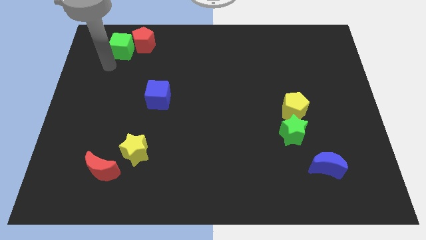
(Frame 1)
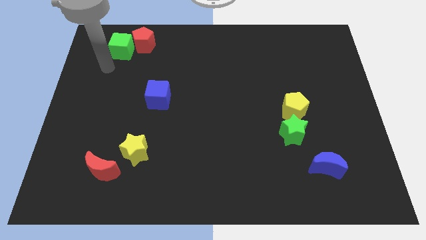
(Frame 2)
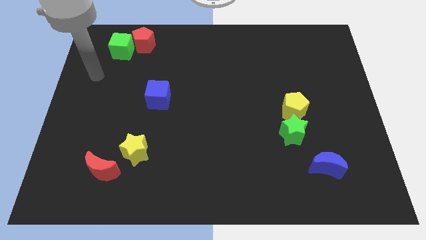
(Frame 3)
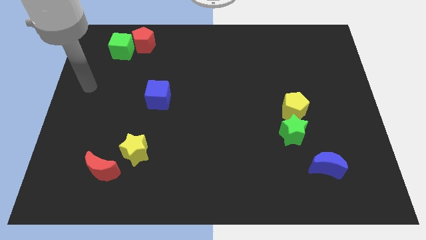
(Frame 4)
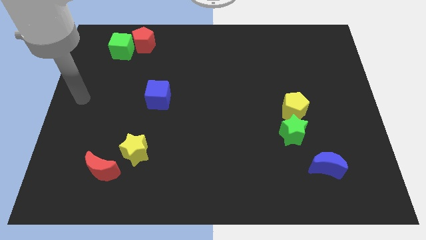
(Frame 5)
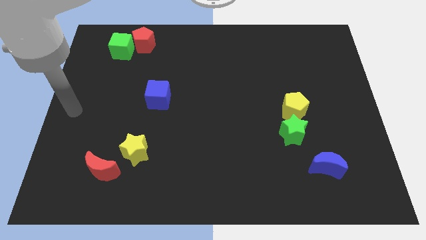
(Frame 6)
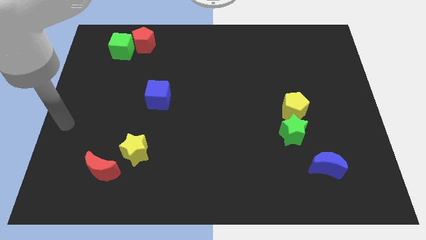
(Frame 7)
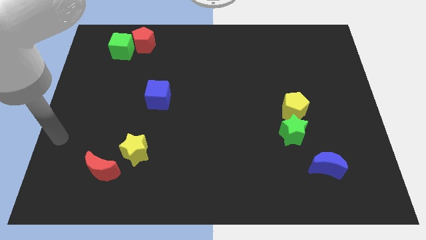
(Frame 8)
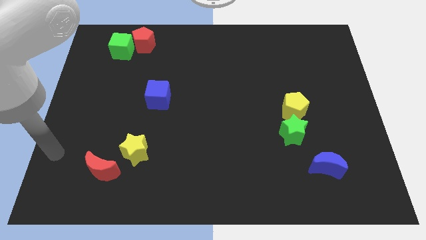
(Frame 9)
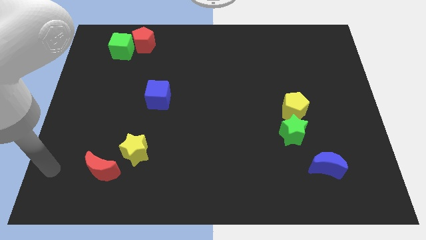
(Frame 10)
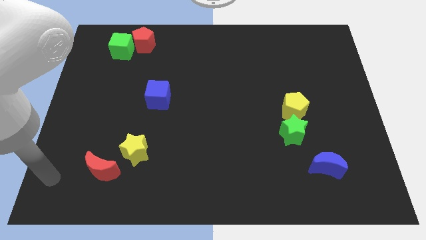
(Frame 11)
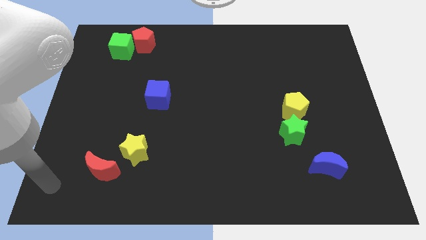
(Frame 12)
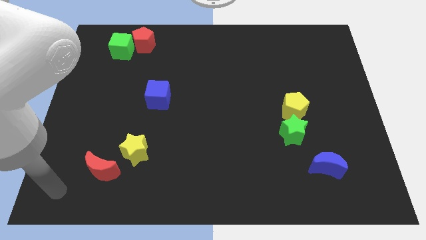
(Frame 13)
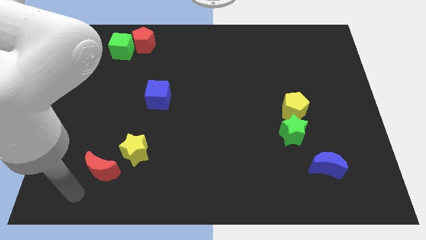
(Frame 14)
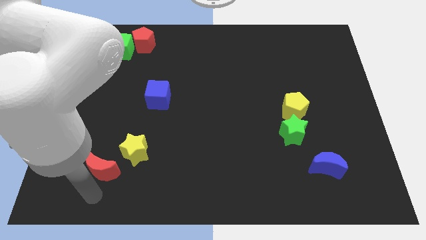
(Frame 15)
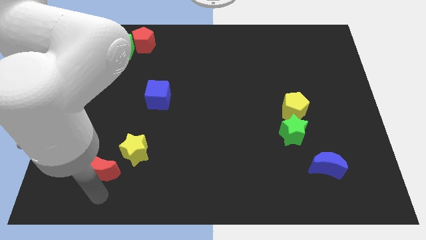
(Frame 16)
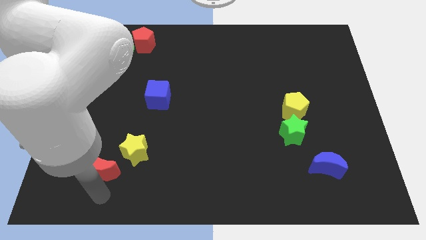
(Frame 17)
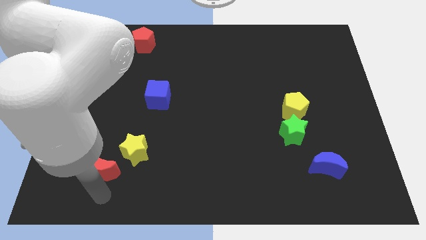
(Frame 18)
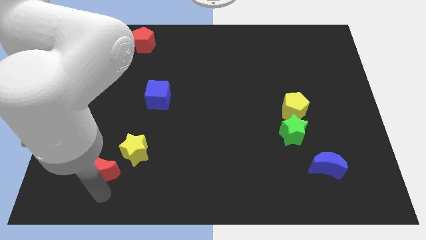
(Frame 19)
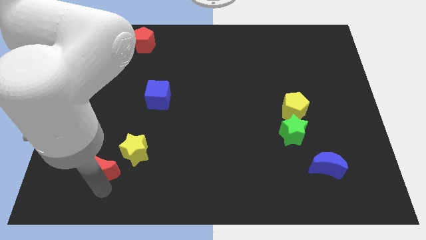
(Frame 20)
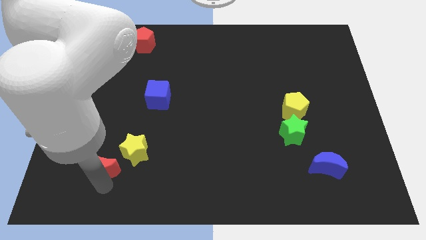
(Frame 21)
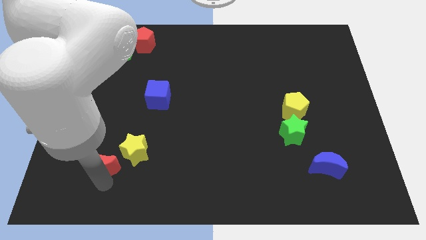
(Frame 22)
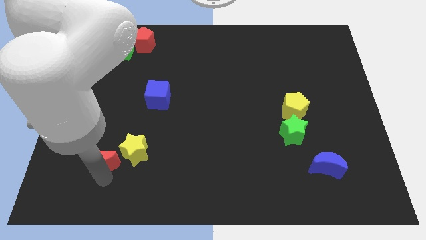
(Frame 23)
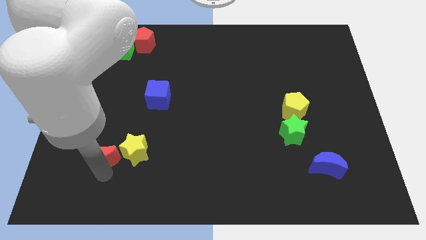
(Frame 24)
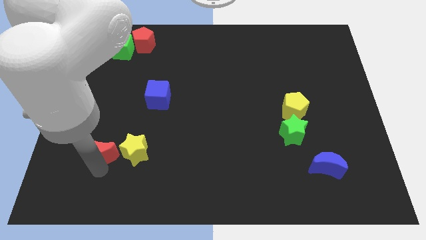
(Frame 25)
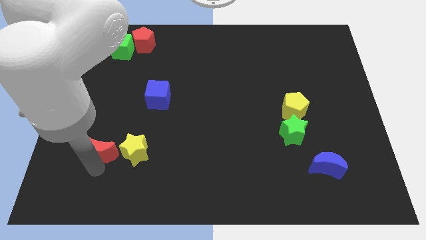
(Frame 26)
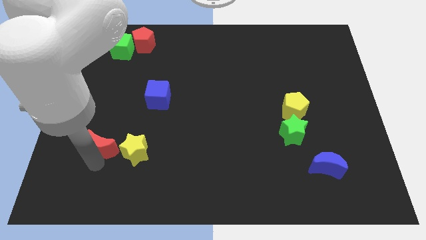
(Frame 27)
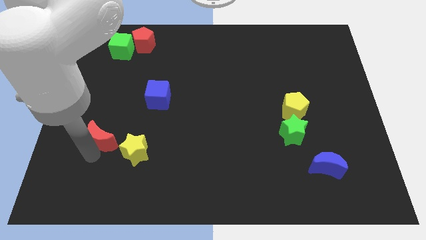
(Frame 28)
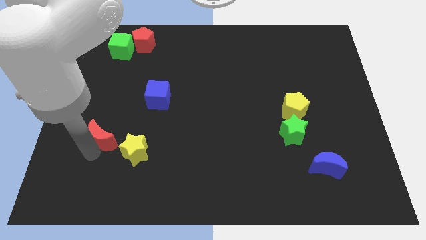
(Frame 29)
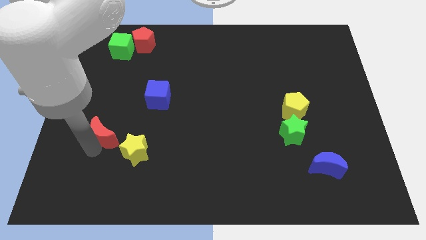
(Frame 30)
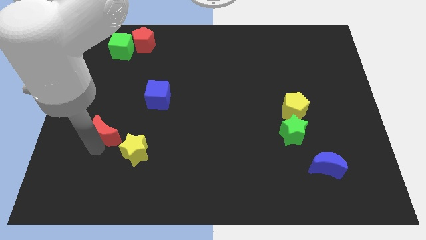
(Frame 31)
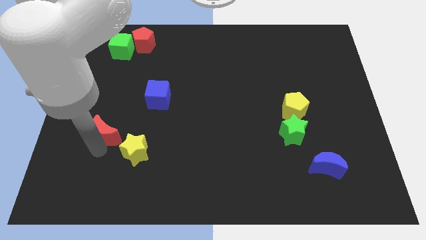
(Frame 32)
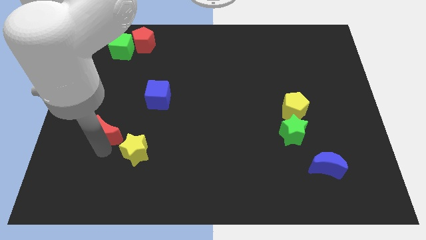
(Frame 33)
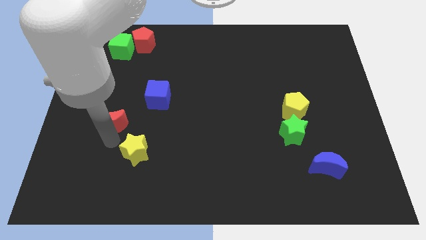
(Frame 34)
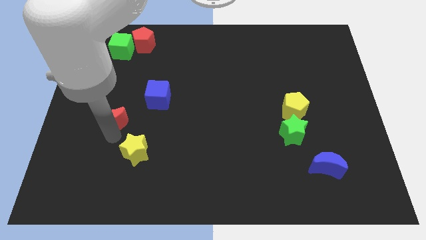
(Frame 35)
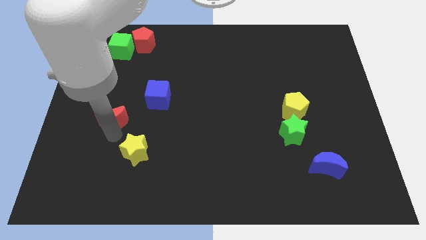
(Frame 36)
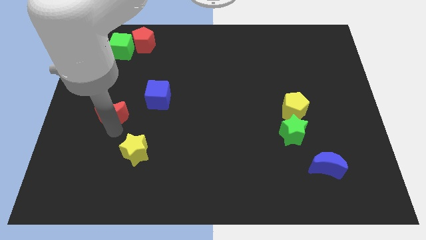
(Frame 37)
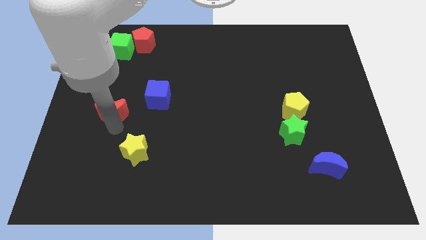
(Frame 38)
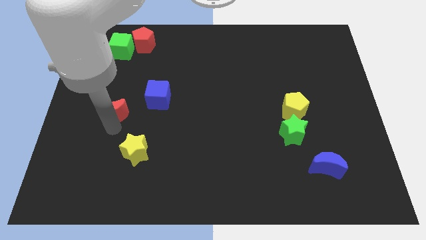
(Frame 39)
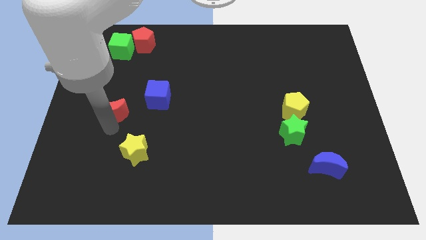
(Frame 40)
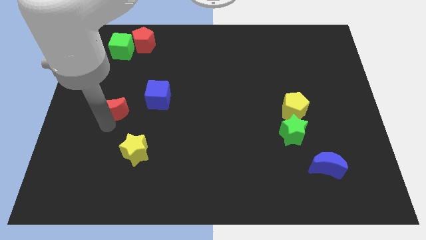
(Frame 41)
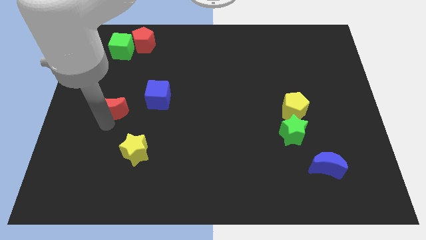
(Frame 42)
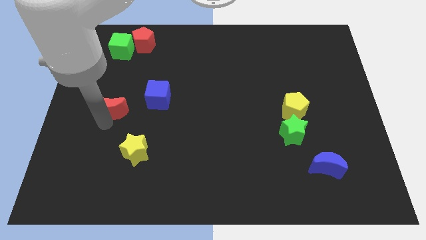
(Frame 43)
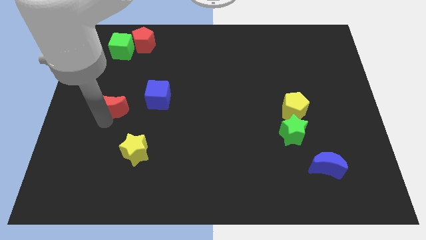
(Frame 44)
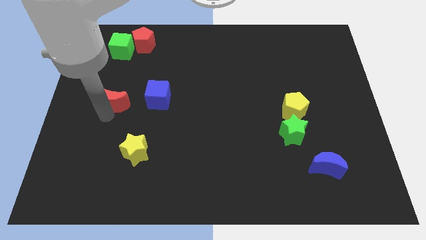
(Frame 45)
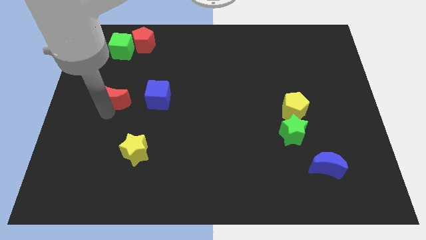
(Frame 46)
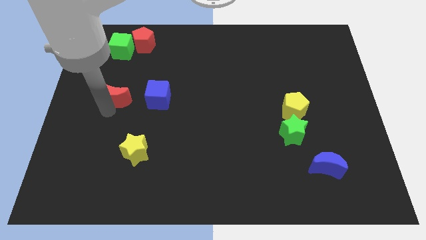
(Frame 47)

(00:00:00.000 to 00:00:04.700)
move the red moon away from the yellow star

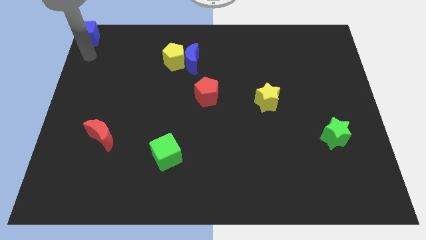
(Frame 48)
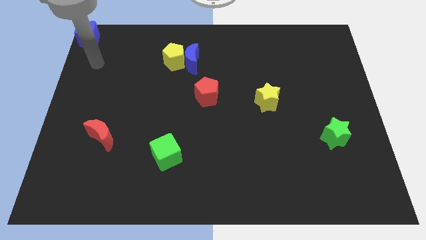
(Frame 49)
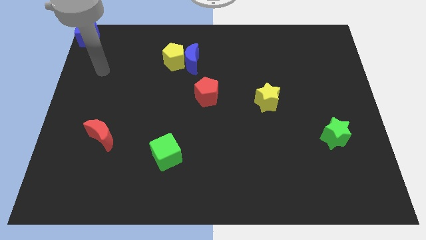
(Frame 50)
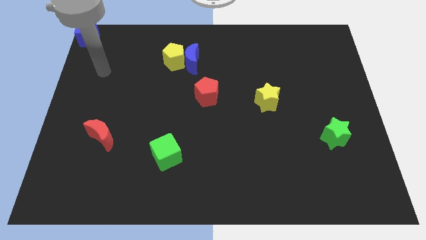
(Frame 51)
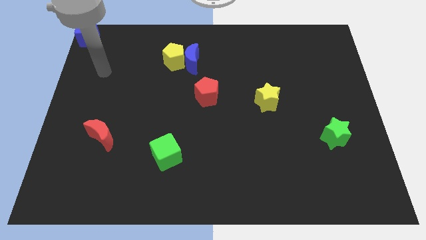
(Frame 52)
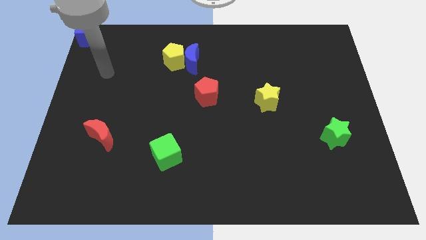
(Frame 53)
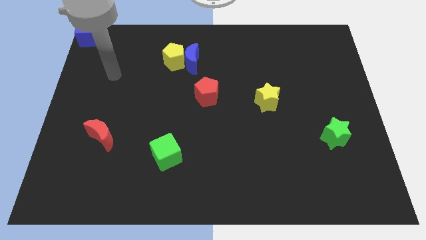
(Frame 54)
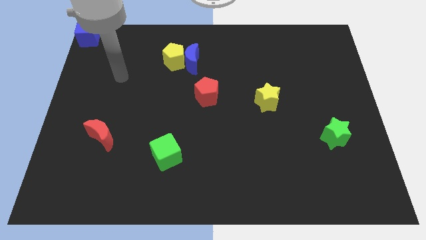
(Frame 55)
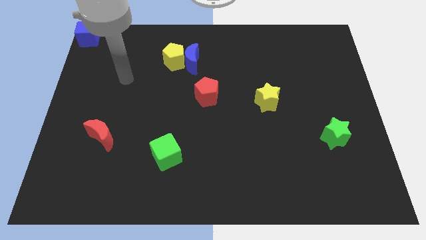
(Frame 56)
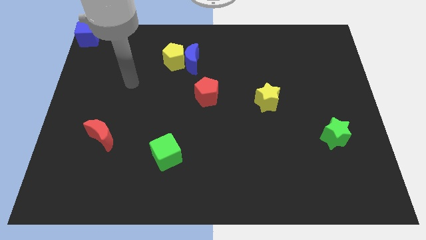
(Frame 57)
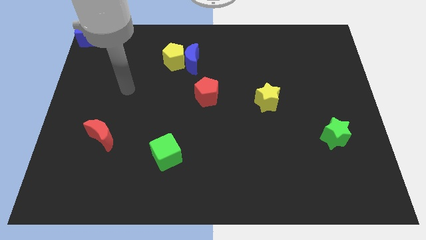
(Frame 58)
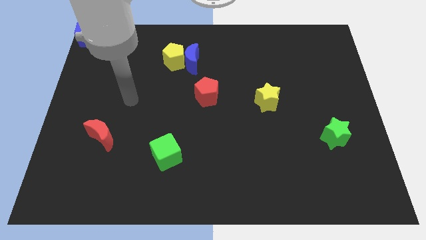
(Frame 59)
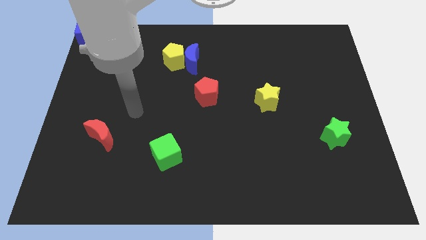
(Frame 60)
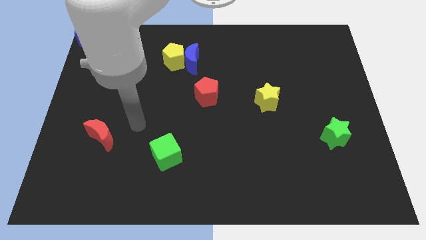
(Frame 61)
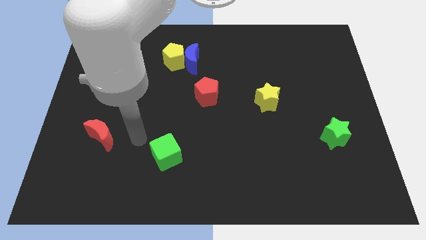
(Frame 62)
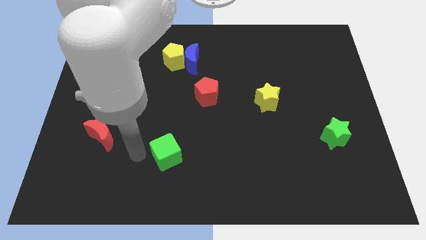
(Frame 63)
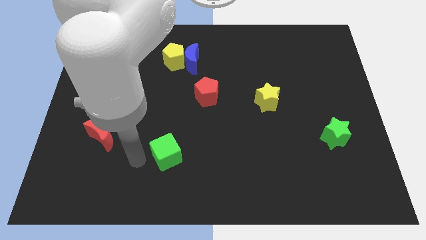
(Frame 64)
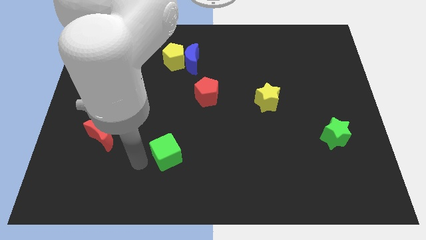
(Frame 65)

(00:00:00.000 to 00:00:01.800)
move your arm towards the green cube

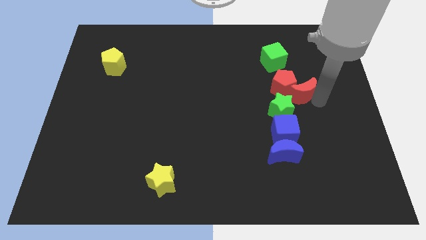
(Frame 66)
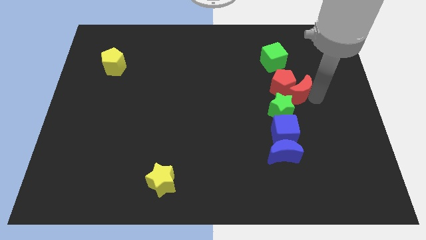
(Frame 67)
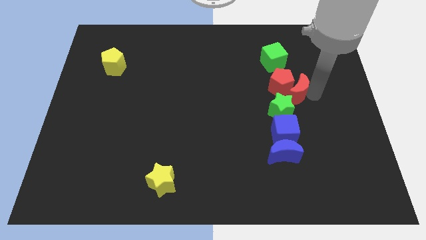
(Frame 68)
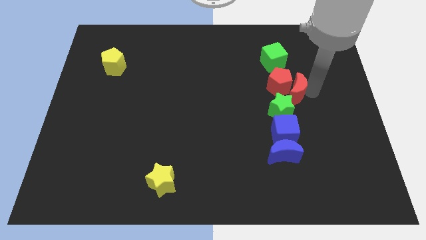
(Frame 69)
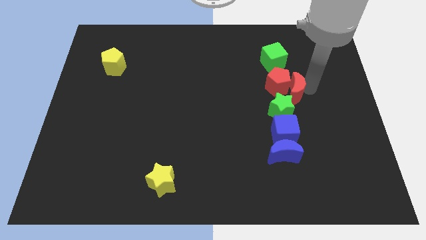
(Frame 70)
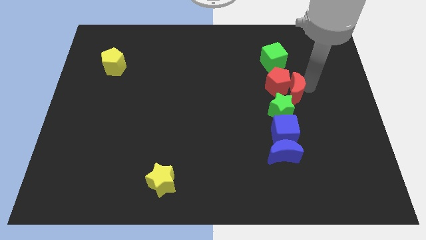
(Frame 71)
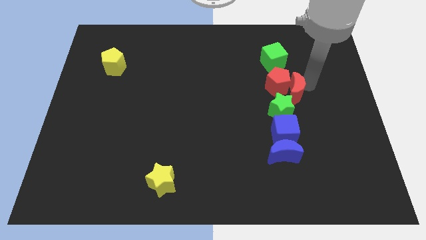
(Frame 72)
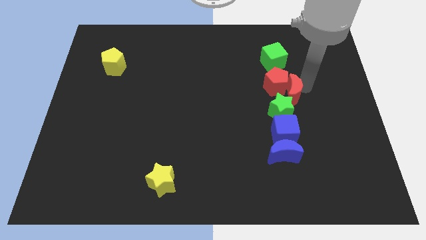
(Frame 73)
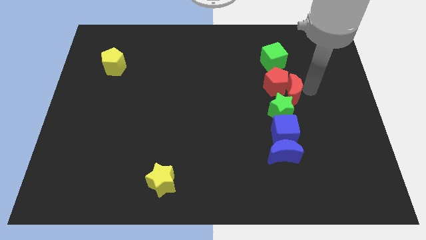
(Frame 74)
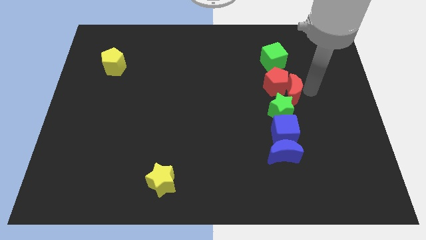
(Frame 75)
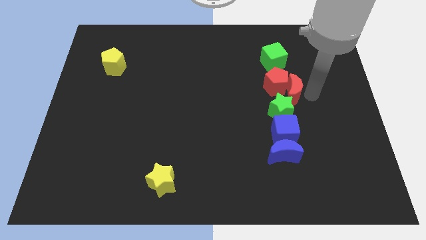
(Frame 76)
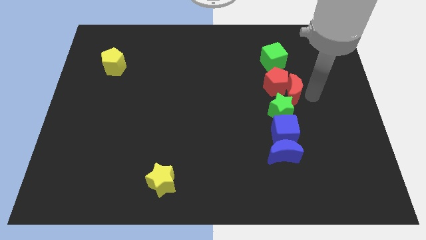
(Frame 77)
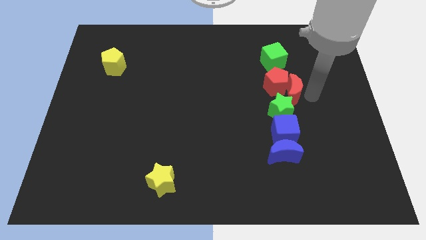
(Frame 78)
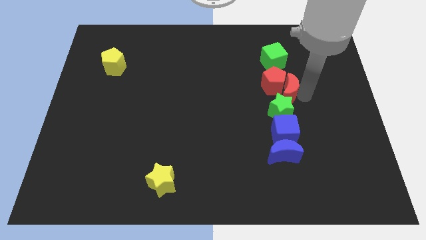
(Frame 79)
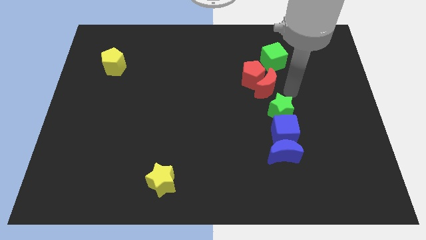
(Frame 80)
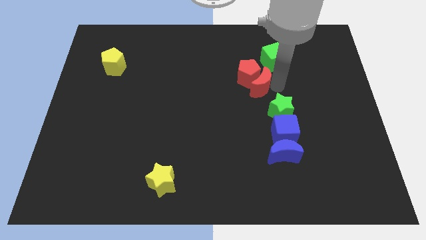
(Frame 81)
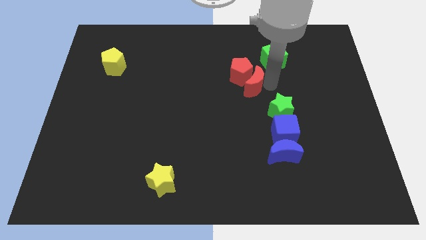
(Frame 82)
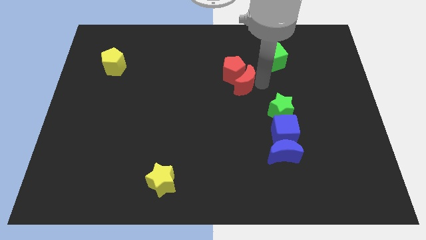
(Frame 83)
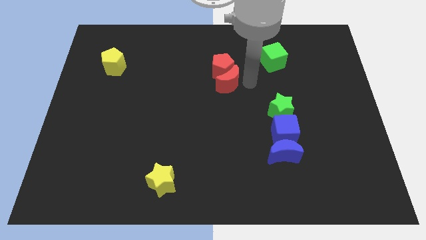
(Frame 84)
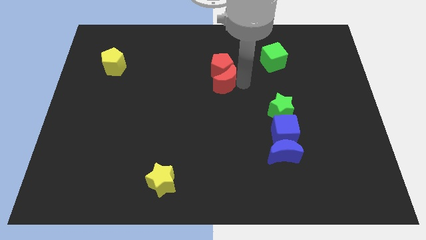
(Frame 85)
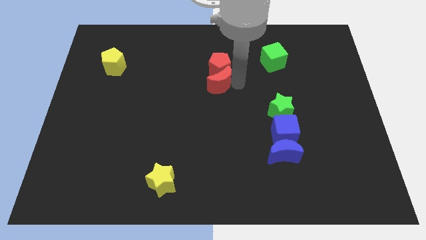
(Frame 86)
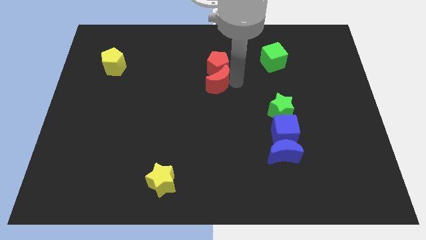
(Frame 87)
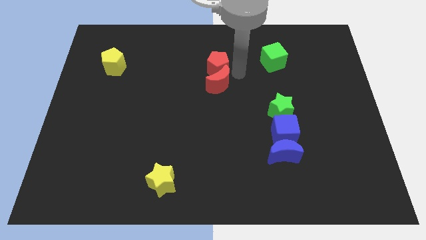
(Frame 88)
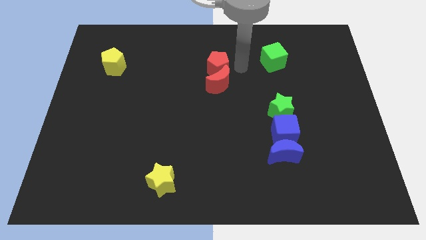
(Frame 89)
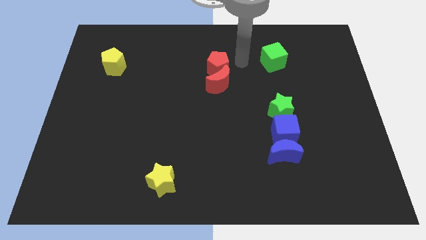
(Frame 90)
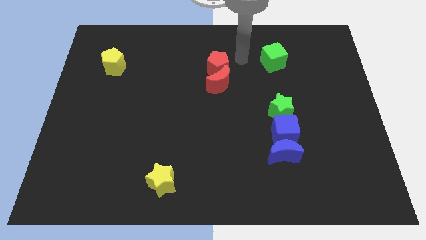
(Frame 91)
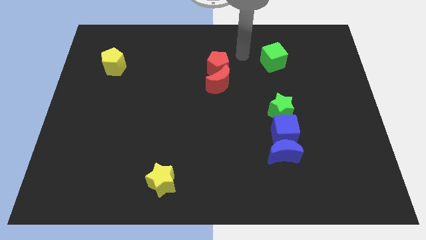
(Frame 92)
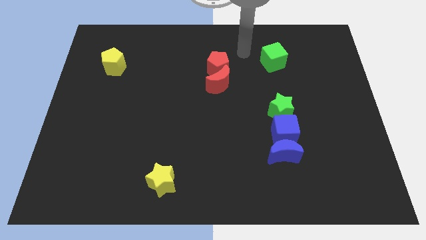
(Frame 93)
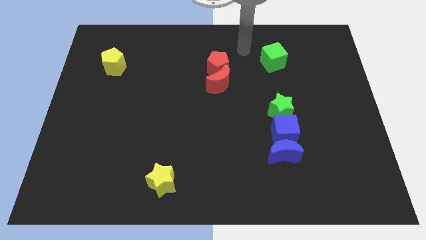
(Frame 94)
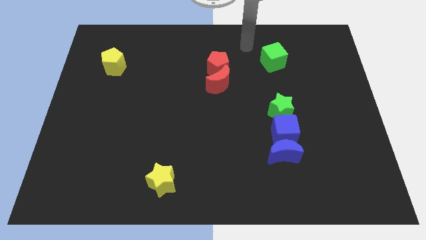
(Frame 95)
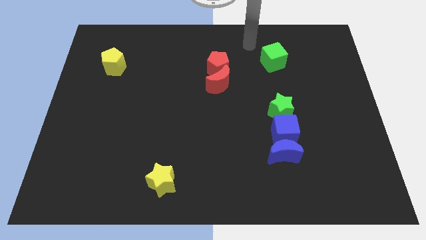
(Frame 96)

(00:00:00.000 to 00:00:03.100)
separate the red moon and red pentagon from the green star
